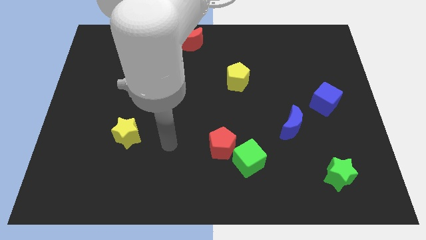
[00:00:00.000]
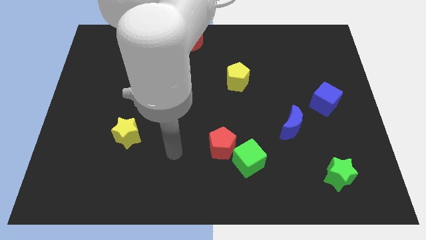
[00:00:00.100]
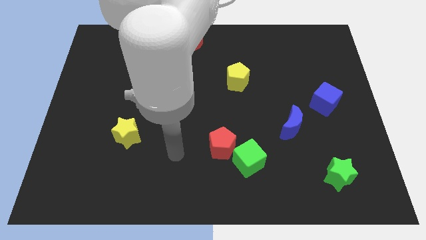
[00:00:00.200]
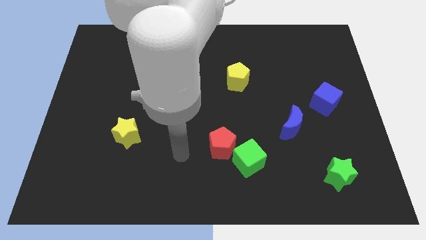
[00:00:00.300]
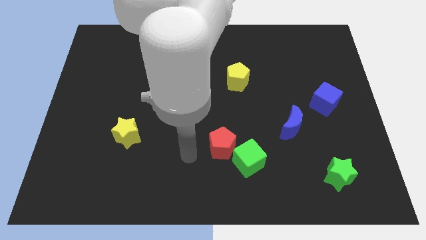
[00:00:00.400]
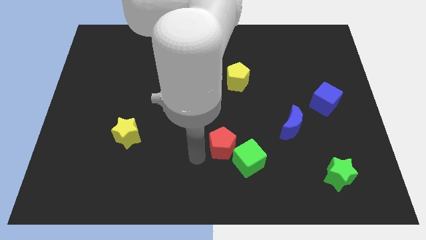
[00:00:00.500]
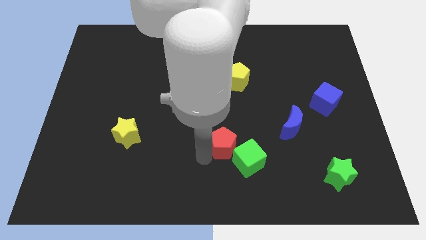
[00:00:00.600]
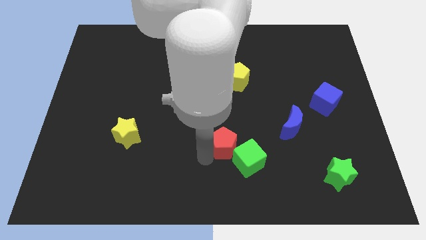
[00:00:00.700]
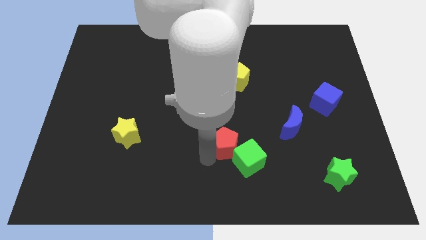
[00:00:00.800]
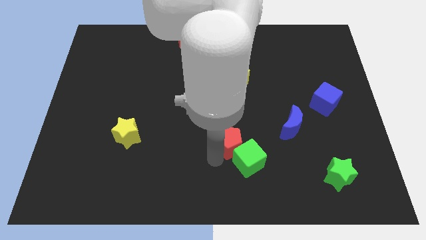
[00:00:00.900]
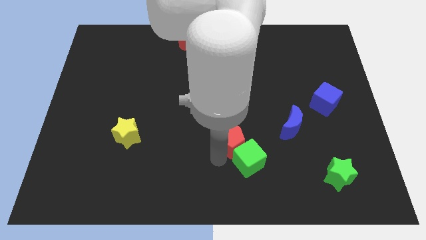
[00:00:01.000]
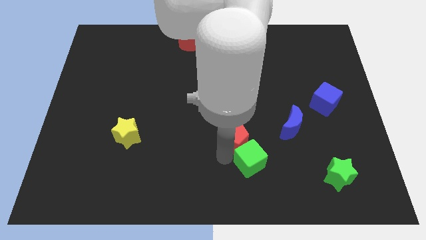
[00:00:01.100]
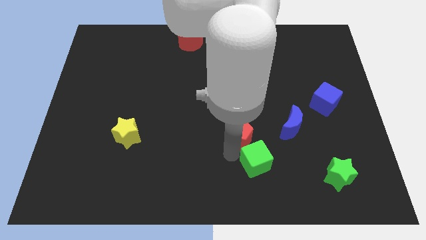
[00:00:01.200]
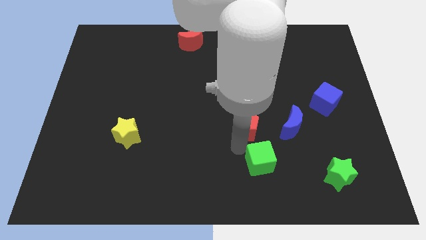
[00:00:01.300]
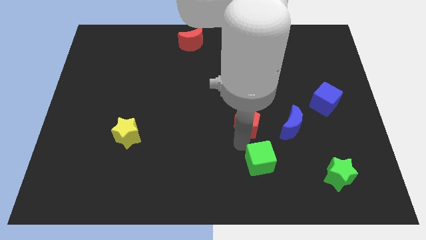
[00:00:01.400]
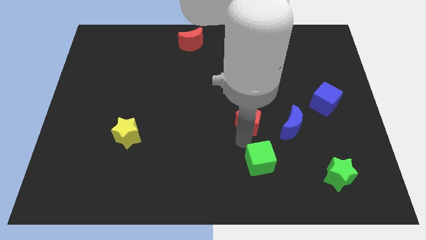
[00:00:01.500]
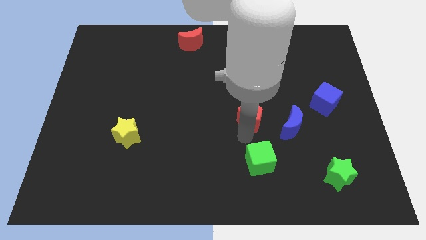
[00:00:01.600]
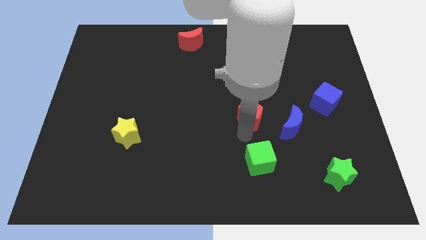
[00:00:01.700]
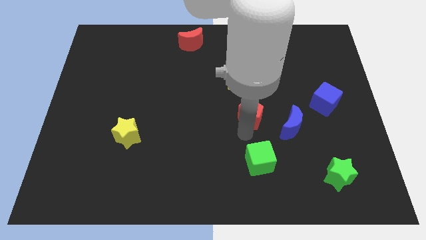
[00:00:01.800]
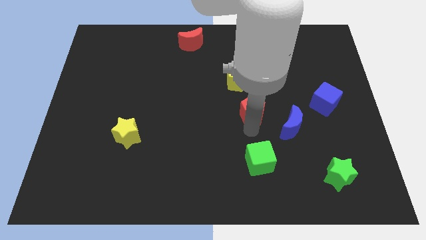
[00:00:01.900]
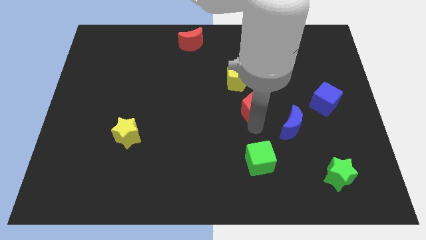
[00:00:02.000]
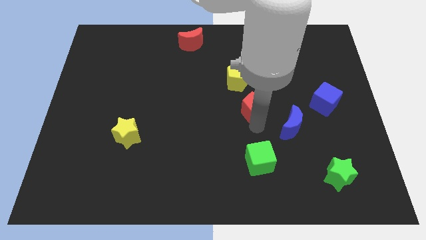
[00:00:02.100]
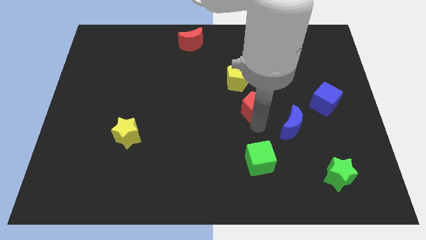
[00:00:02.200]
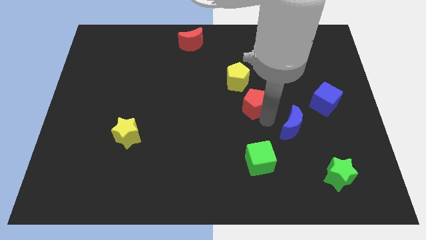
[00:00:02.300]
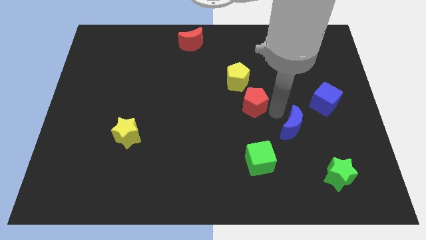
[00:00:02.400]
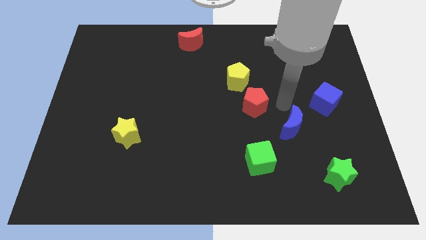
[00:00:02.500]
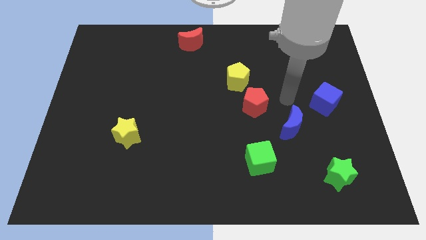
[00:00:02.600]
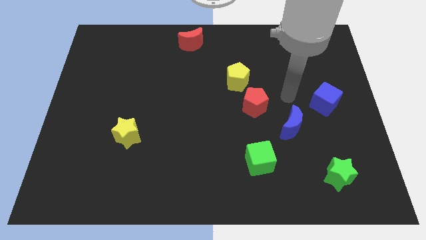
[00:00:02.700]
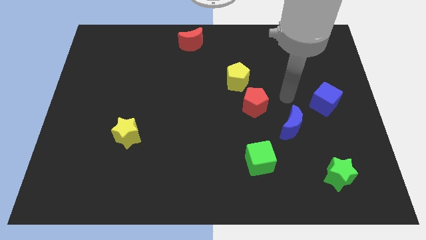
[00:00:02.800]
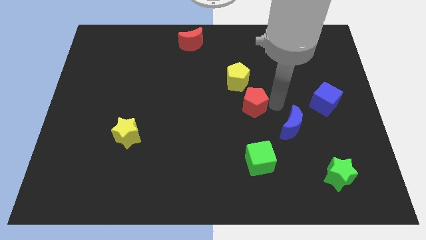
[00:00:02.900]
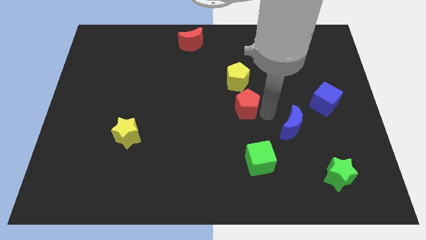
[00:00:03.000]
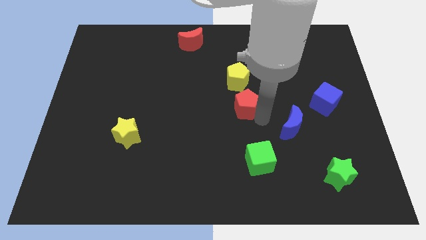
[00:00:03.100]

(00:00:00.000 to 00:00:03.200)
put the red pentagon diagonally in between the yellow pentagon and green cube

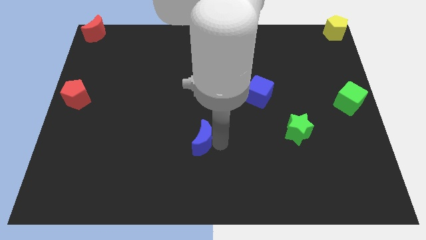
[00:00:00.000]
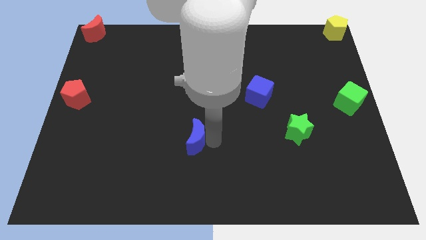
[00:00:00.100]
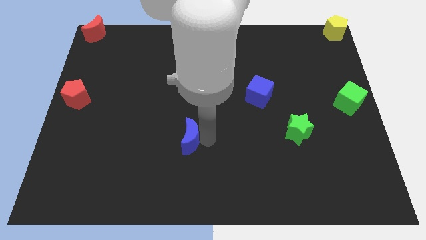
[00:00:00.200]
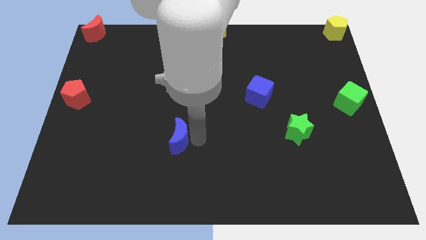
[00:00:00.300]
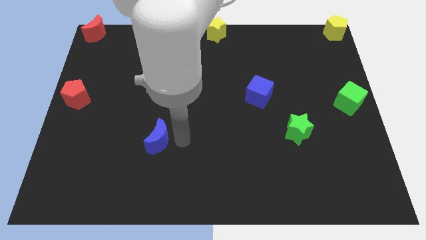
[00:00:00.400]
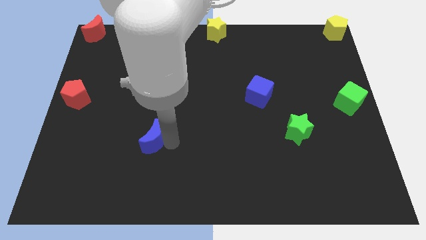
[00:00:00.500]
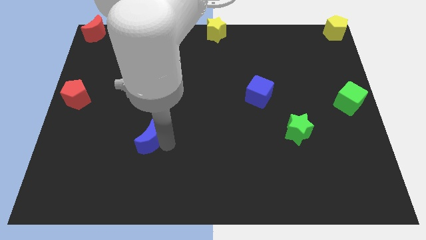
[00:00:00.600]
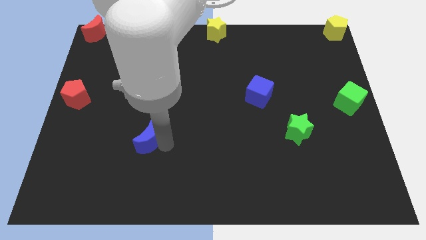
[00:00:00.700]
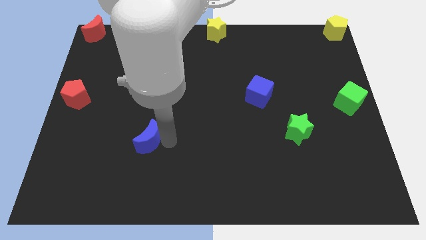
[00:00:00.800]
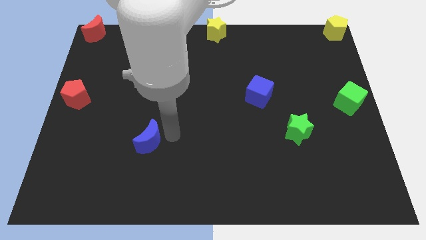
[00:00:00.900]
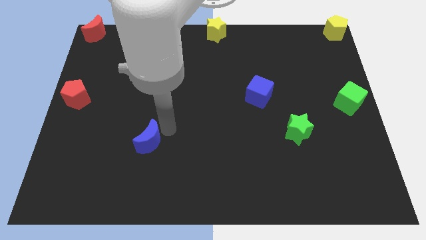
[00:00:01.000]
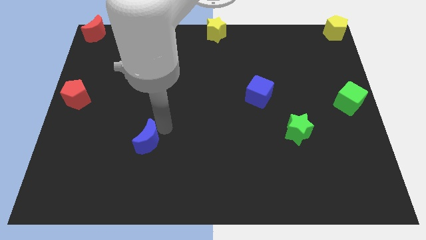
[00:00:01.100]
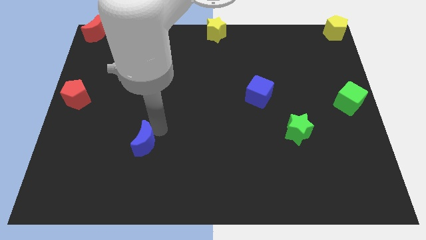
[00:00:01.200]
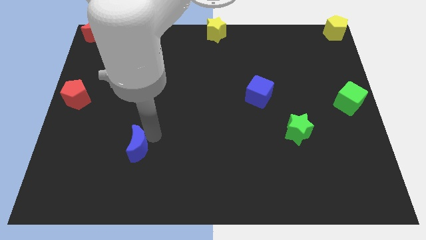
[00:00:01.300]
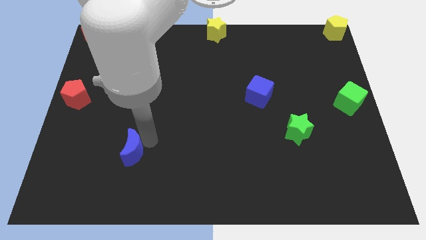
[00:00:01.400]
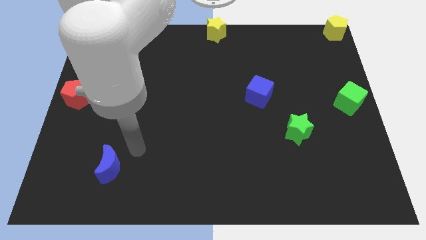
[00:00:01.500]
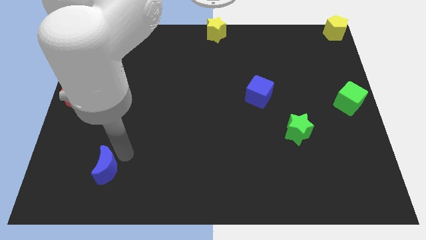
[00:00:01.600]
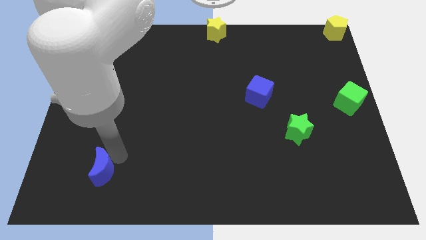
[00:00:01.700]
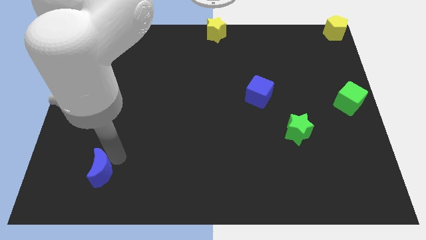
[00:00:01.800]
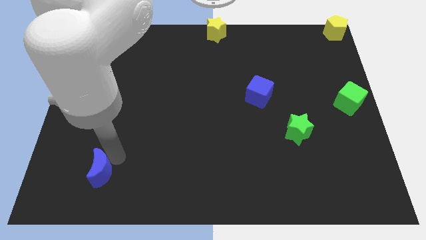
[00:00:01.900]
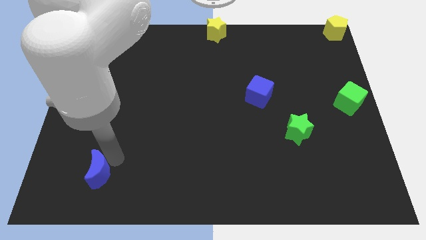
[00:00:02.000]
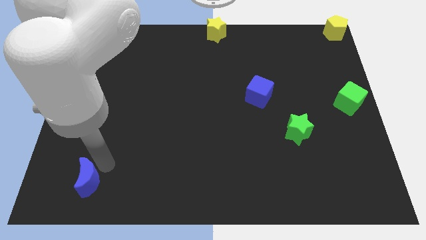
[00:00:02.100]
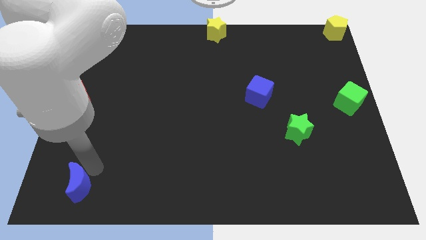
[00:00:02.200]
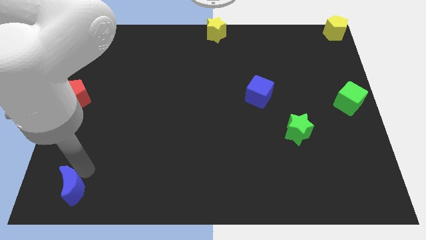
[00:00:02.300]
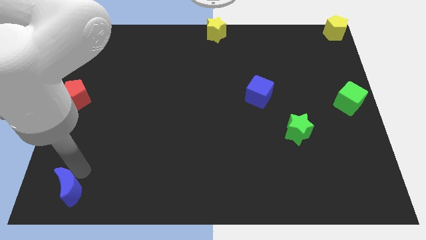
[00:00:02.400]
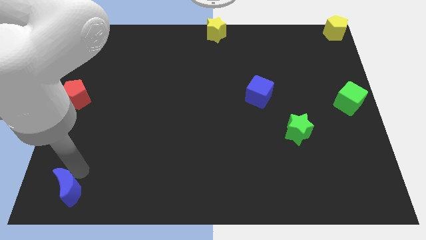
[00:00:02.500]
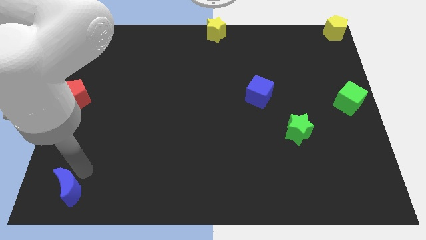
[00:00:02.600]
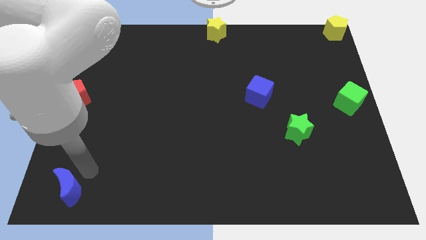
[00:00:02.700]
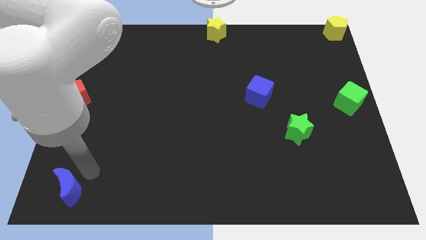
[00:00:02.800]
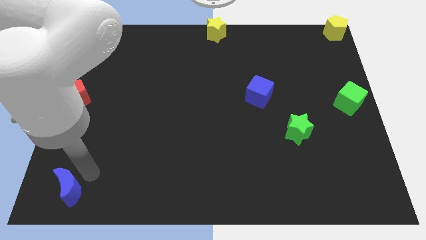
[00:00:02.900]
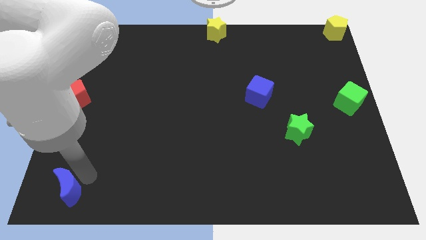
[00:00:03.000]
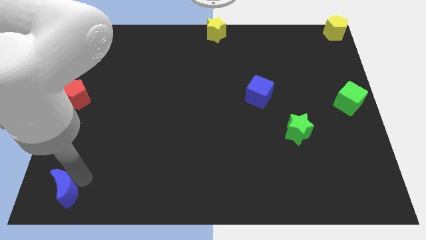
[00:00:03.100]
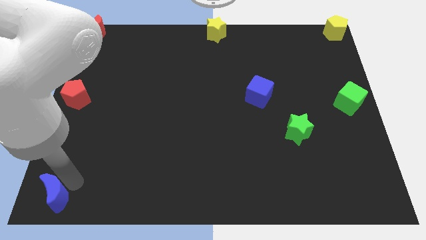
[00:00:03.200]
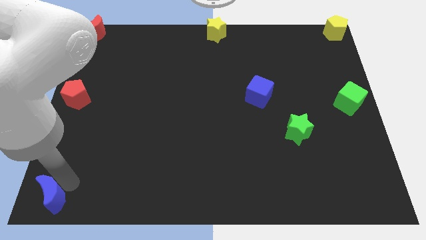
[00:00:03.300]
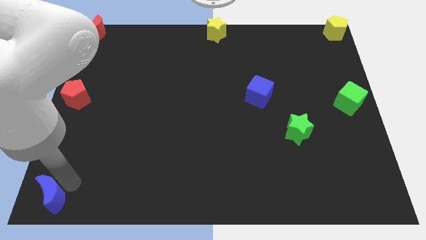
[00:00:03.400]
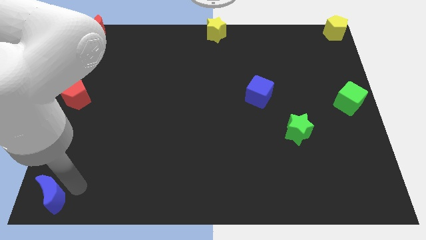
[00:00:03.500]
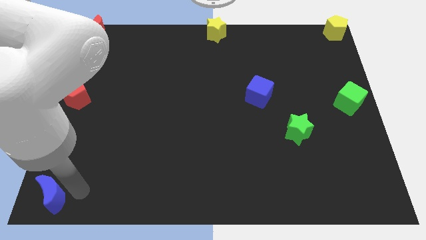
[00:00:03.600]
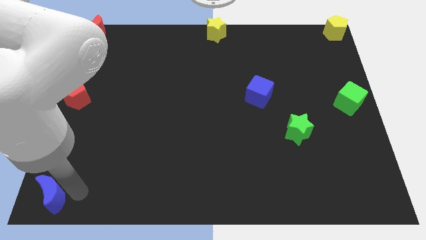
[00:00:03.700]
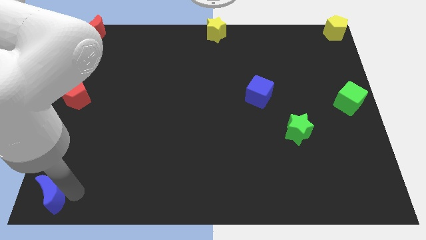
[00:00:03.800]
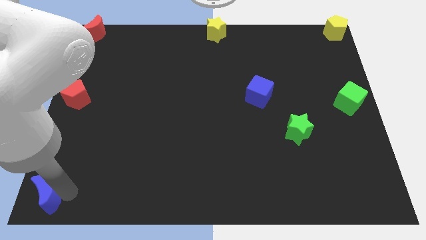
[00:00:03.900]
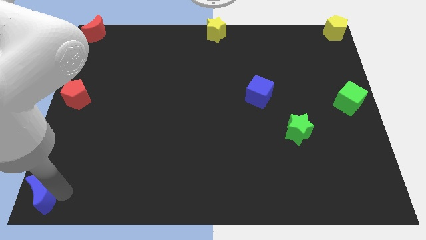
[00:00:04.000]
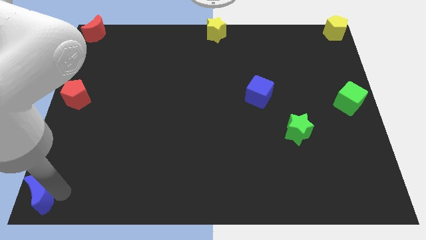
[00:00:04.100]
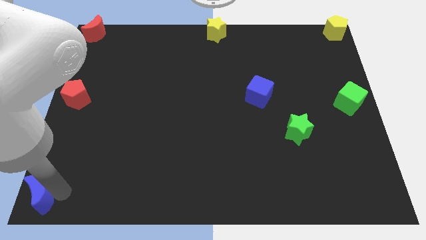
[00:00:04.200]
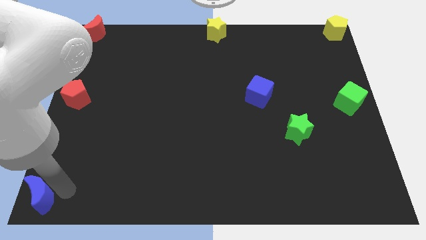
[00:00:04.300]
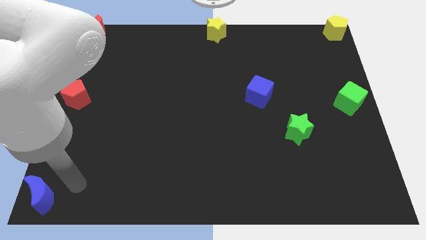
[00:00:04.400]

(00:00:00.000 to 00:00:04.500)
place the blue crescent to the left bottom of the board

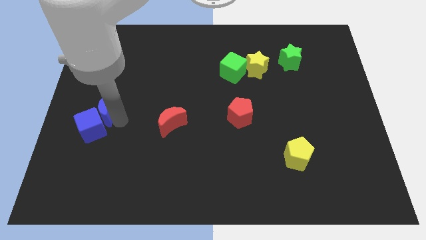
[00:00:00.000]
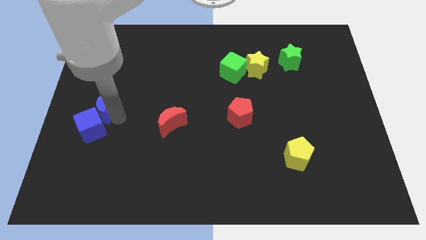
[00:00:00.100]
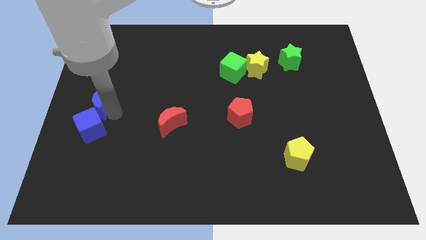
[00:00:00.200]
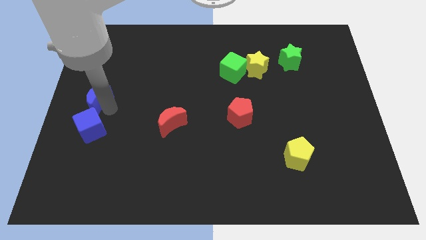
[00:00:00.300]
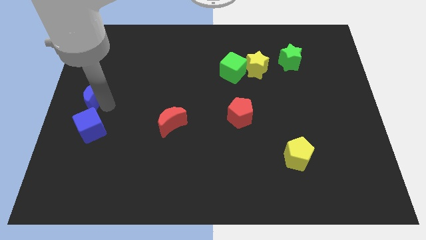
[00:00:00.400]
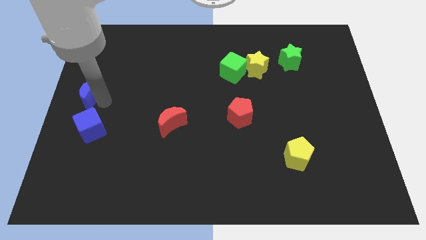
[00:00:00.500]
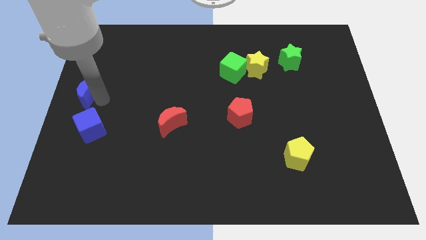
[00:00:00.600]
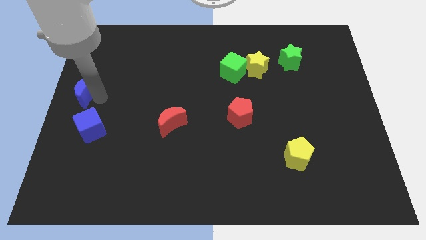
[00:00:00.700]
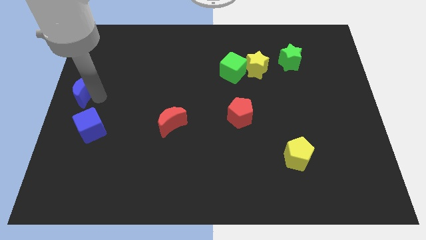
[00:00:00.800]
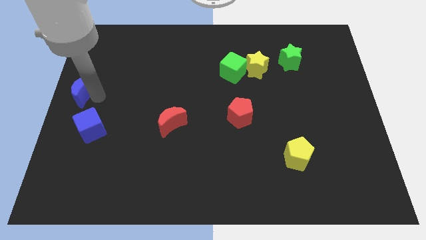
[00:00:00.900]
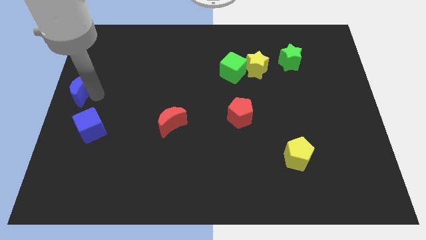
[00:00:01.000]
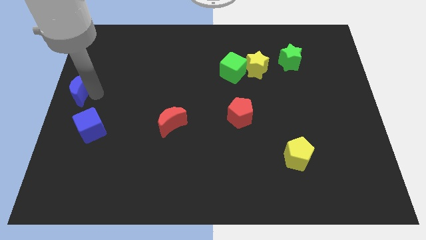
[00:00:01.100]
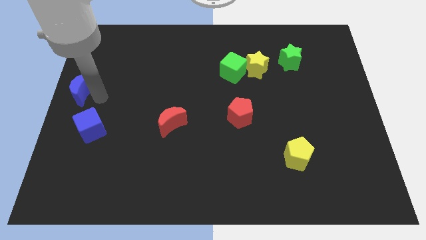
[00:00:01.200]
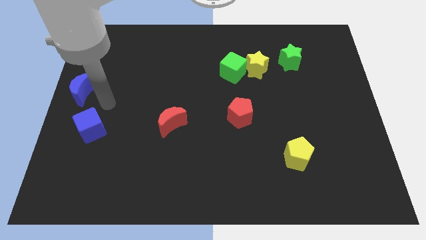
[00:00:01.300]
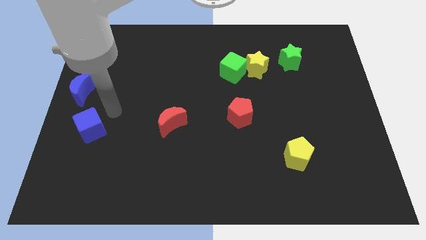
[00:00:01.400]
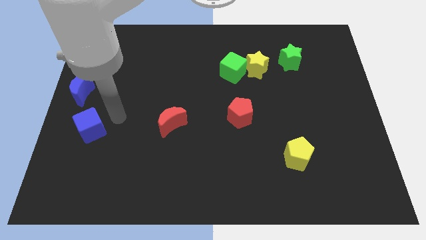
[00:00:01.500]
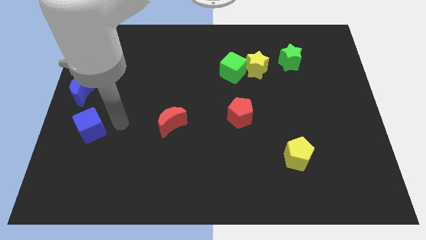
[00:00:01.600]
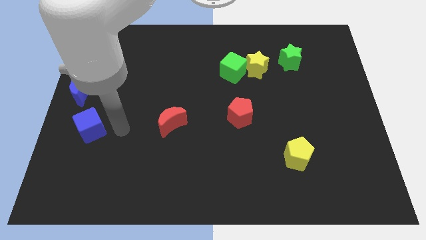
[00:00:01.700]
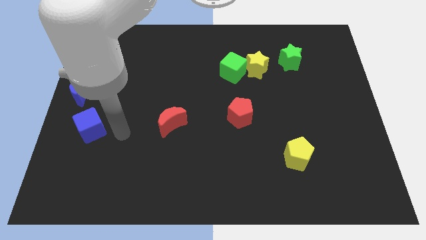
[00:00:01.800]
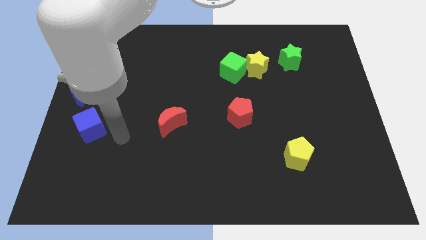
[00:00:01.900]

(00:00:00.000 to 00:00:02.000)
separate the blue moon and the blue cube
